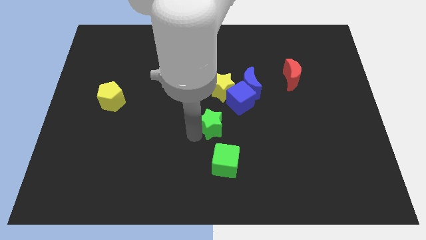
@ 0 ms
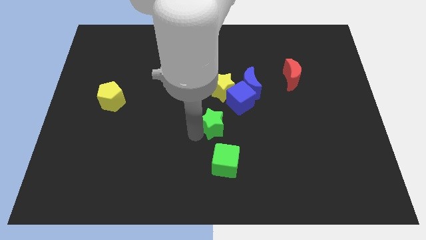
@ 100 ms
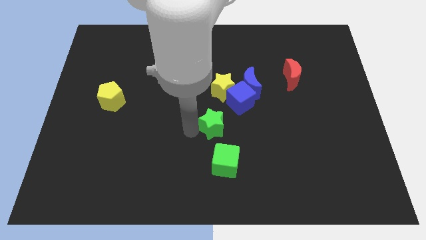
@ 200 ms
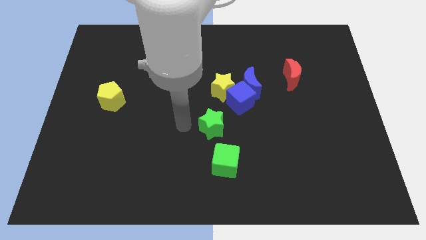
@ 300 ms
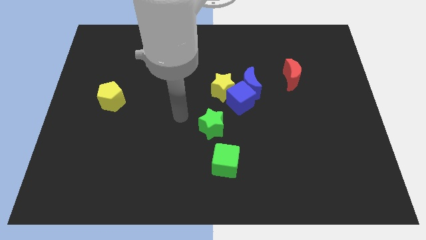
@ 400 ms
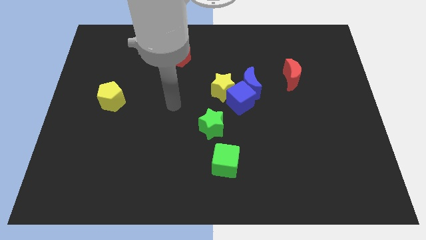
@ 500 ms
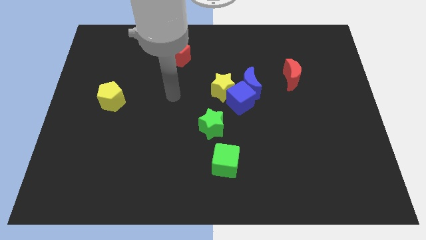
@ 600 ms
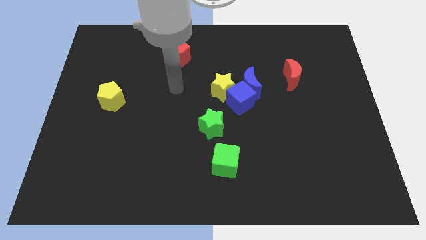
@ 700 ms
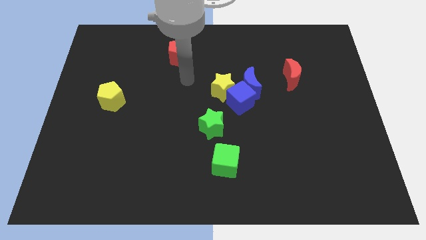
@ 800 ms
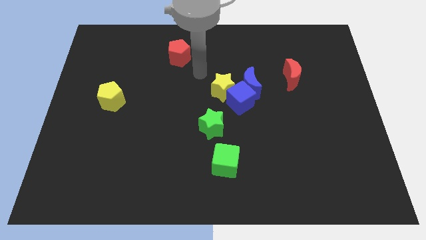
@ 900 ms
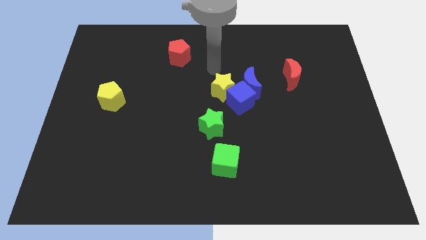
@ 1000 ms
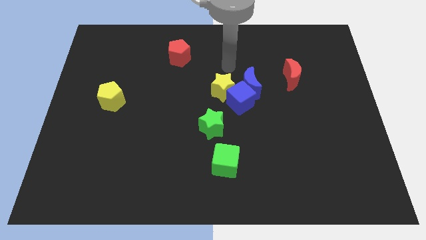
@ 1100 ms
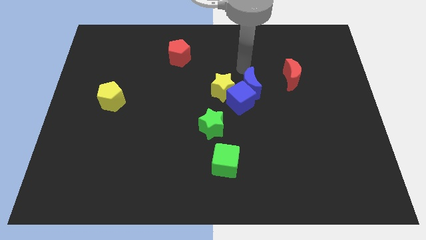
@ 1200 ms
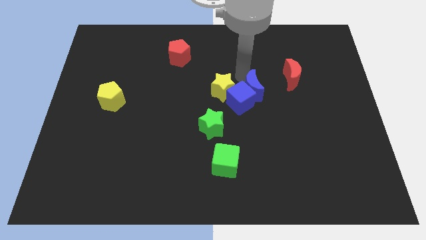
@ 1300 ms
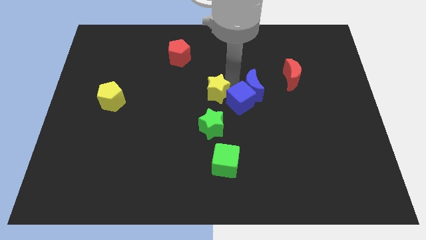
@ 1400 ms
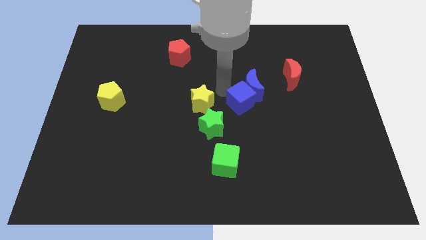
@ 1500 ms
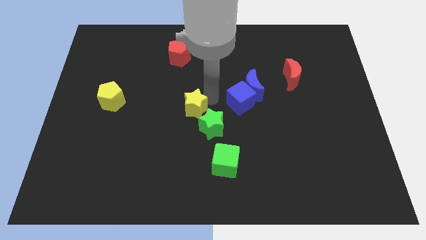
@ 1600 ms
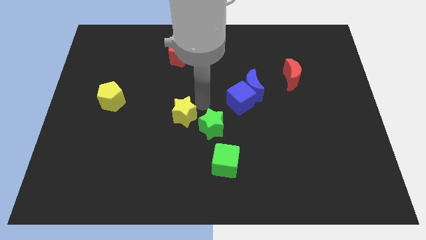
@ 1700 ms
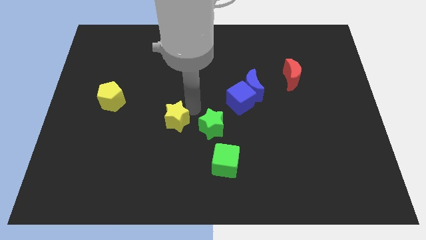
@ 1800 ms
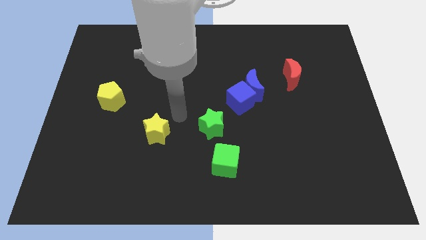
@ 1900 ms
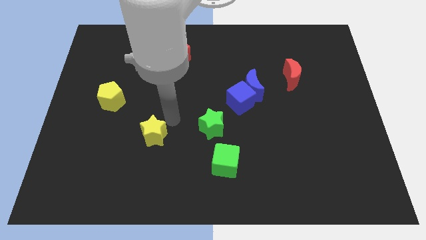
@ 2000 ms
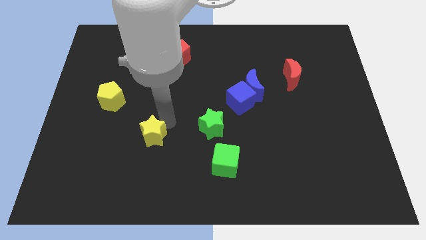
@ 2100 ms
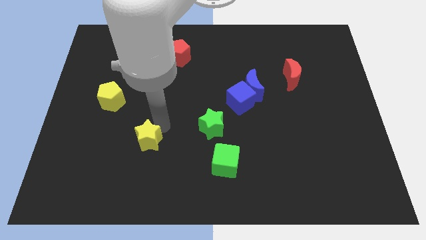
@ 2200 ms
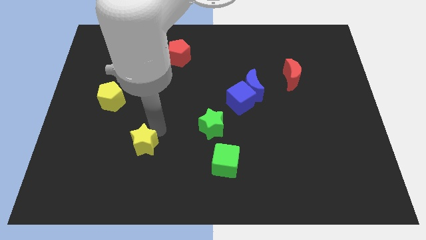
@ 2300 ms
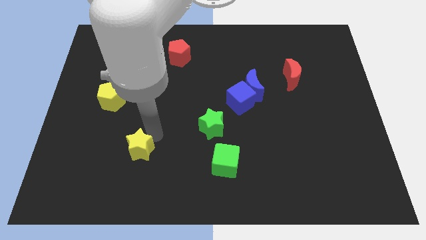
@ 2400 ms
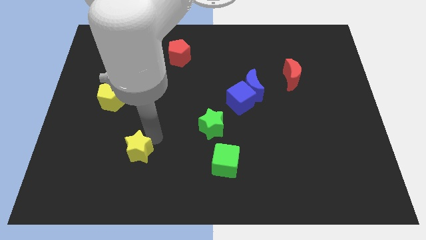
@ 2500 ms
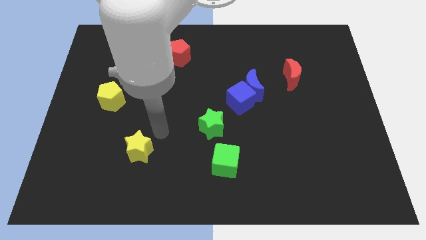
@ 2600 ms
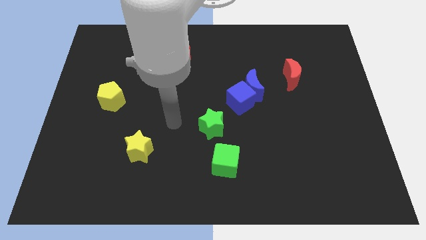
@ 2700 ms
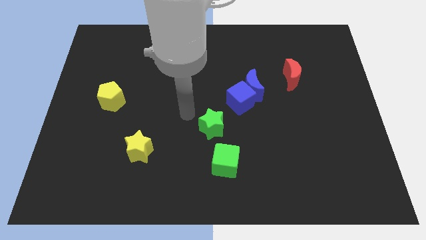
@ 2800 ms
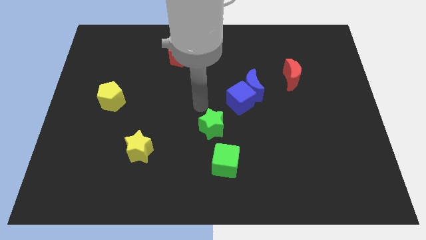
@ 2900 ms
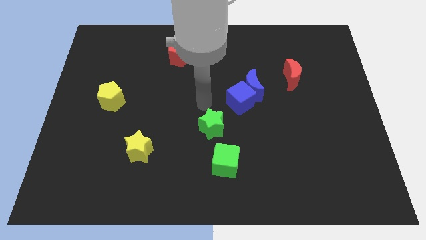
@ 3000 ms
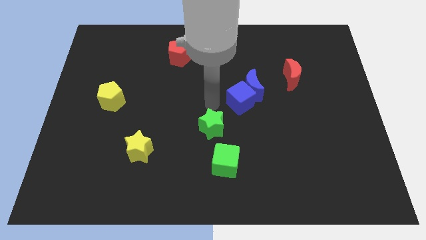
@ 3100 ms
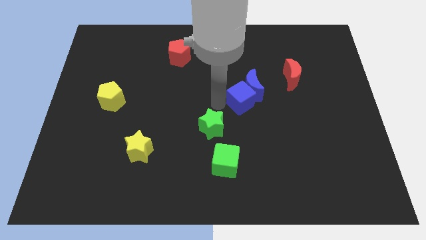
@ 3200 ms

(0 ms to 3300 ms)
separate the yellow star from the blue cube

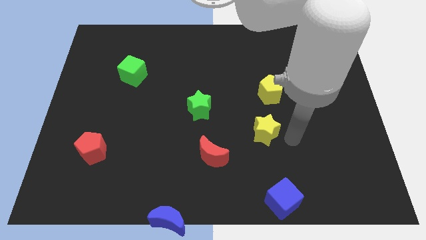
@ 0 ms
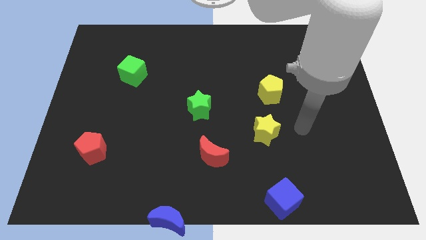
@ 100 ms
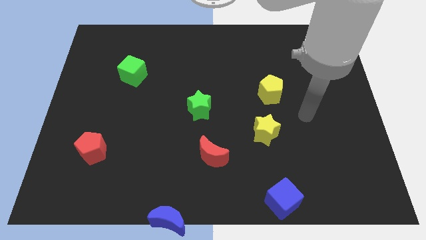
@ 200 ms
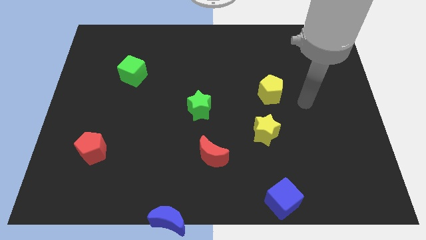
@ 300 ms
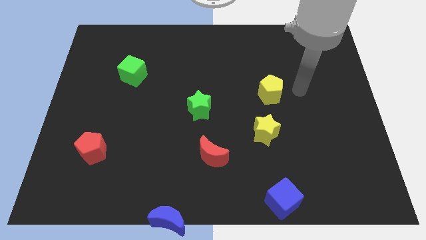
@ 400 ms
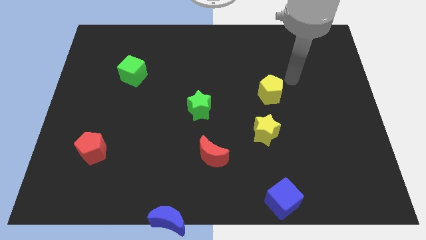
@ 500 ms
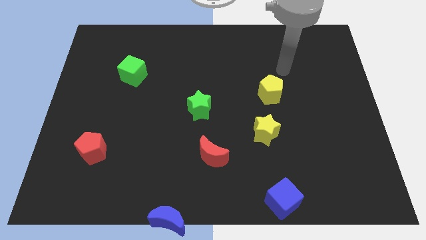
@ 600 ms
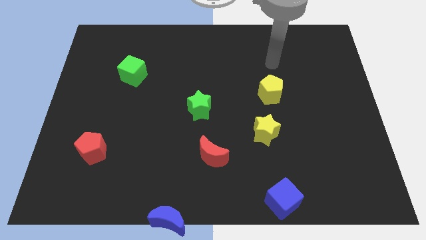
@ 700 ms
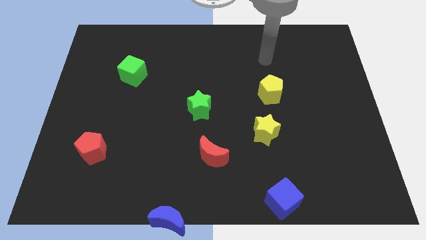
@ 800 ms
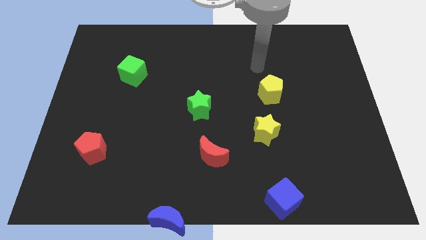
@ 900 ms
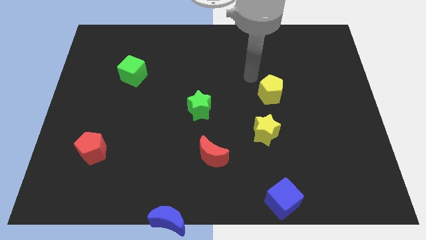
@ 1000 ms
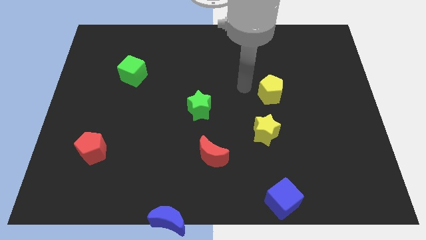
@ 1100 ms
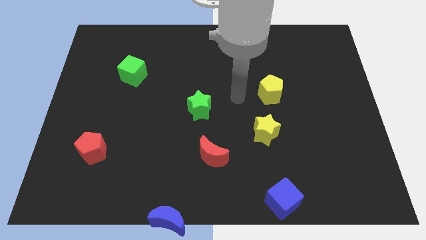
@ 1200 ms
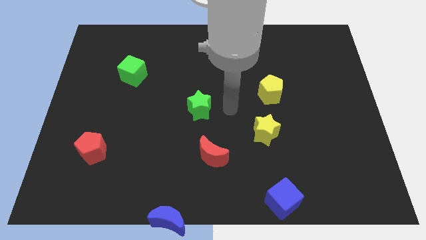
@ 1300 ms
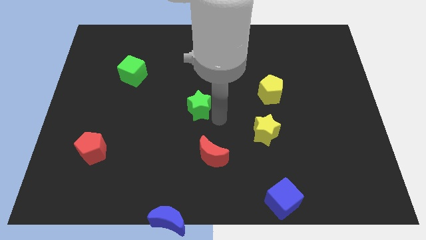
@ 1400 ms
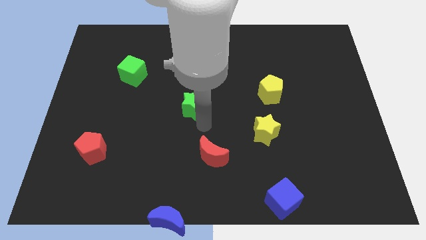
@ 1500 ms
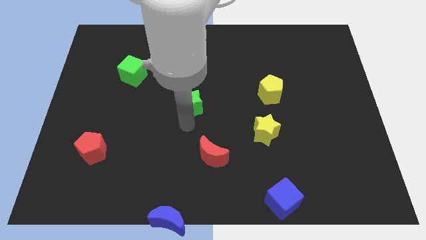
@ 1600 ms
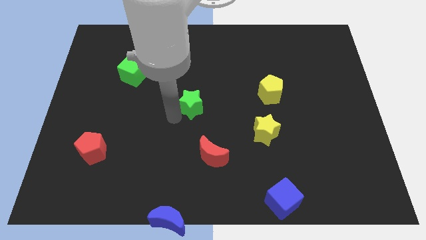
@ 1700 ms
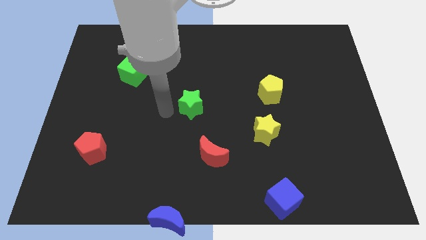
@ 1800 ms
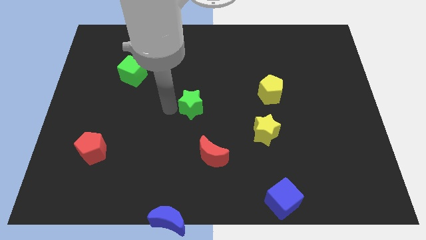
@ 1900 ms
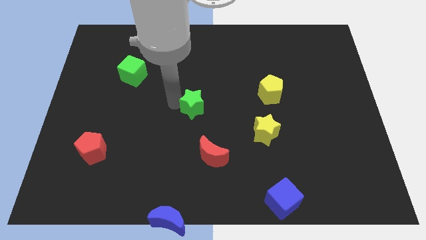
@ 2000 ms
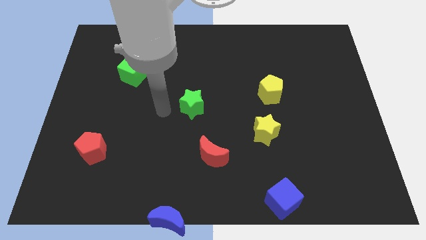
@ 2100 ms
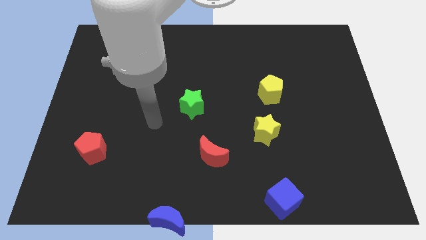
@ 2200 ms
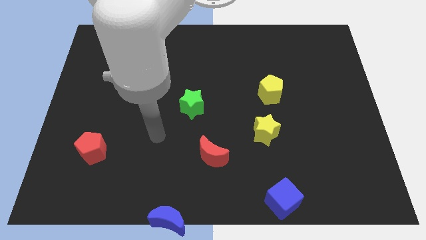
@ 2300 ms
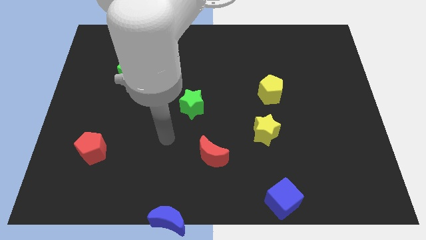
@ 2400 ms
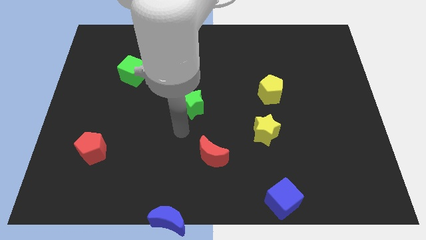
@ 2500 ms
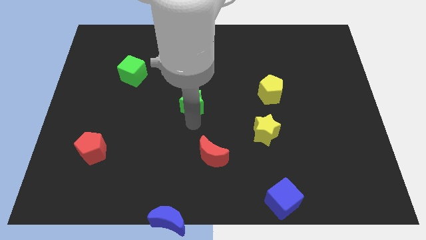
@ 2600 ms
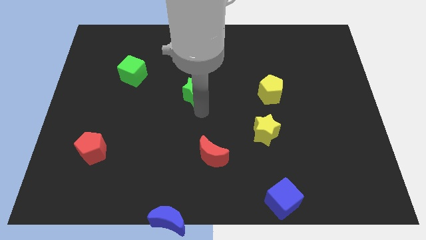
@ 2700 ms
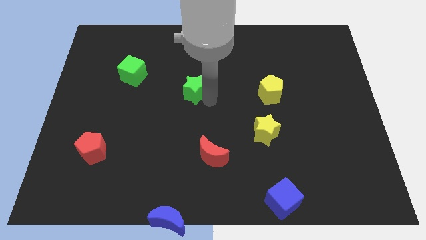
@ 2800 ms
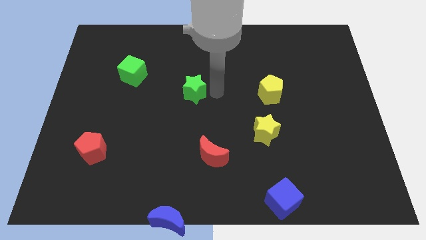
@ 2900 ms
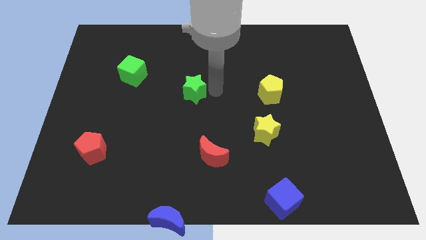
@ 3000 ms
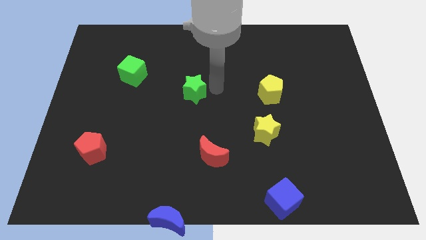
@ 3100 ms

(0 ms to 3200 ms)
move the green star in between the green cube and the yellow star

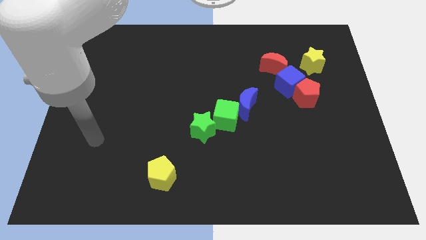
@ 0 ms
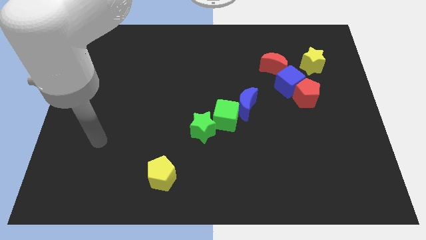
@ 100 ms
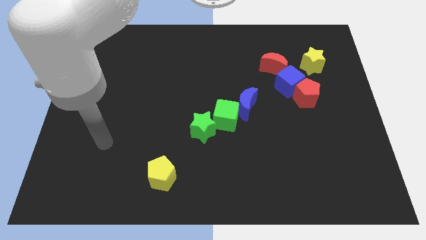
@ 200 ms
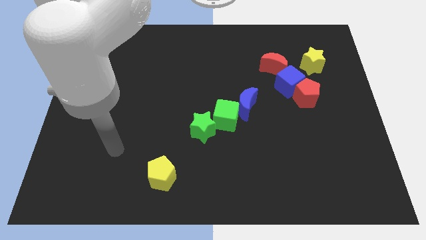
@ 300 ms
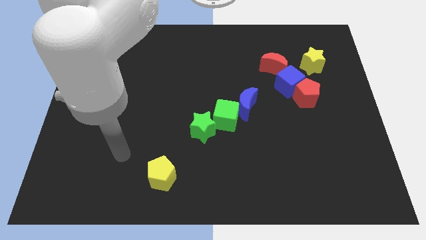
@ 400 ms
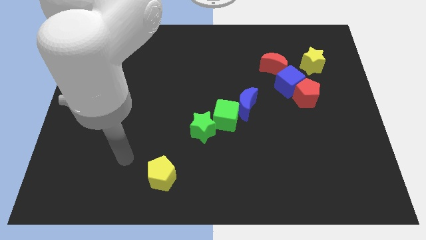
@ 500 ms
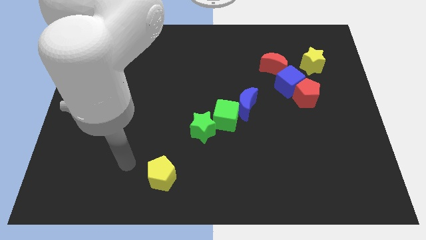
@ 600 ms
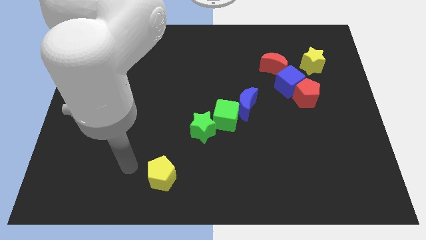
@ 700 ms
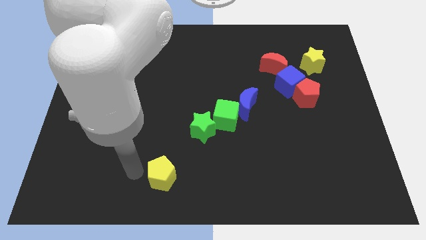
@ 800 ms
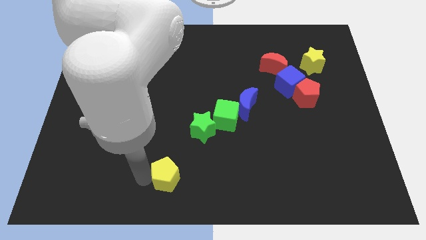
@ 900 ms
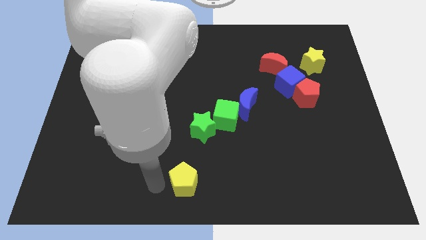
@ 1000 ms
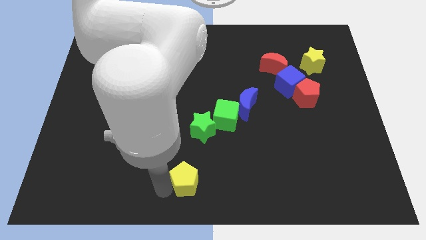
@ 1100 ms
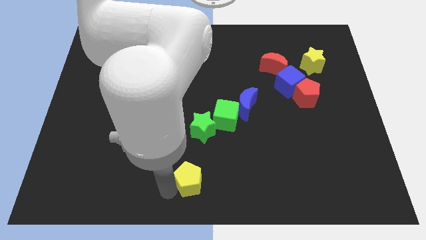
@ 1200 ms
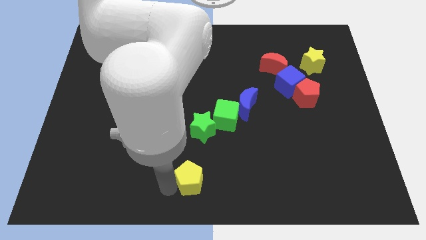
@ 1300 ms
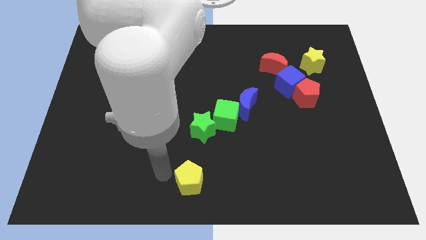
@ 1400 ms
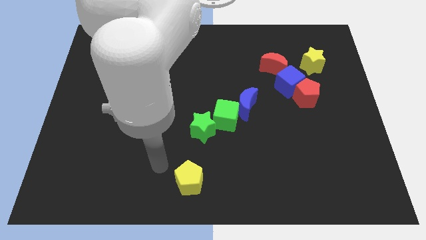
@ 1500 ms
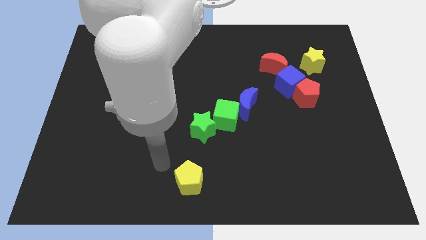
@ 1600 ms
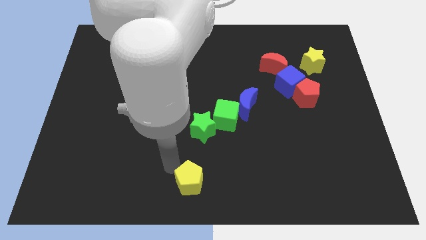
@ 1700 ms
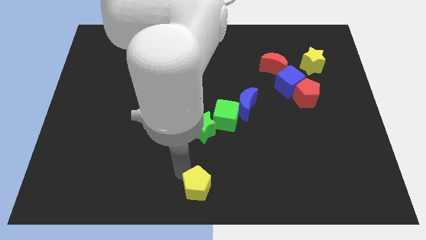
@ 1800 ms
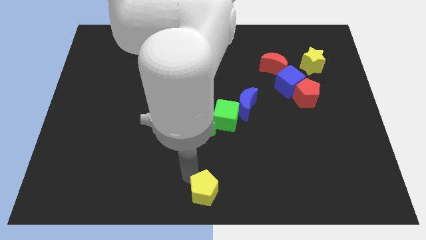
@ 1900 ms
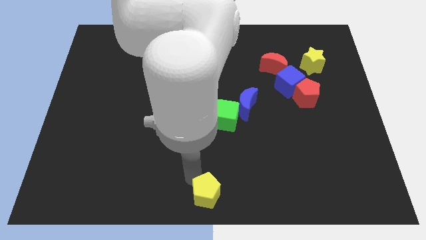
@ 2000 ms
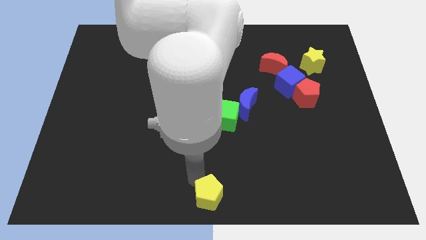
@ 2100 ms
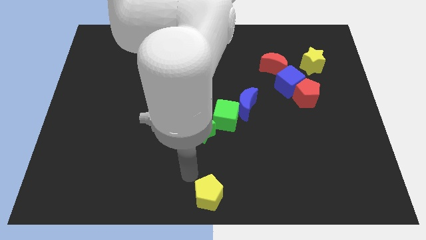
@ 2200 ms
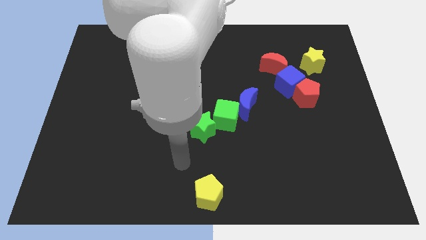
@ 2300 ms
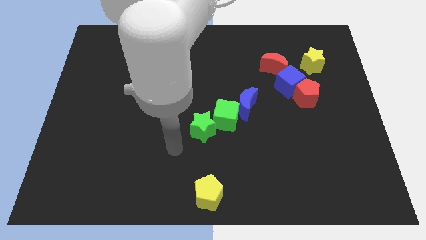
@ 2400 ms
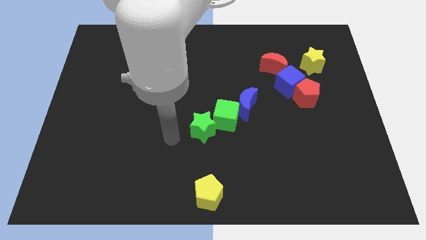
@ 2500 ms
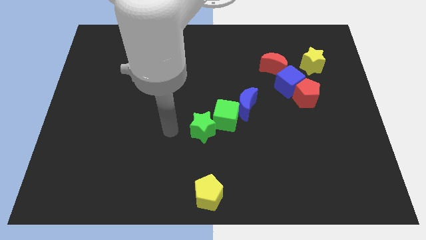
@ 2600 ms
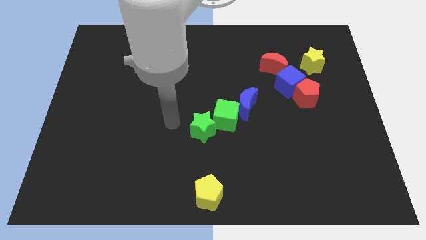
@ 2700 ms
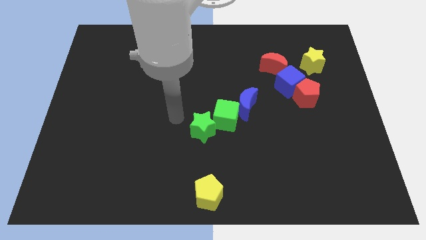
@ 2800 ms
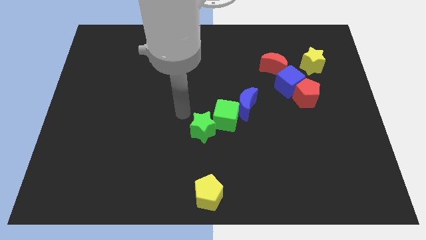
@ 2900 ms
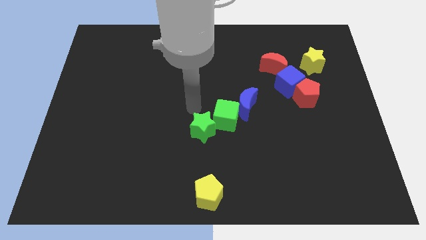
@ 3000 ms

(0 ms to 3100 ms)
push the yellow pentagon to the bottom center
